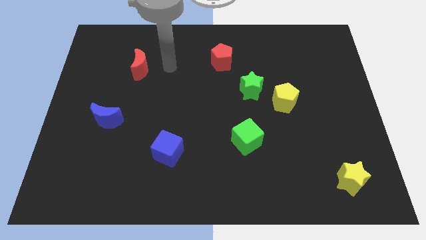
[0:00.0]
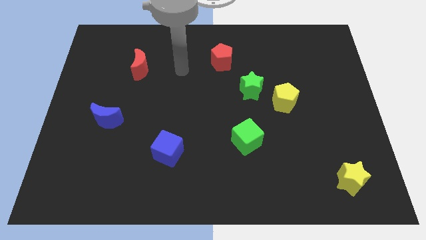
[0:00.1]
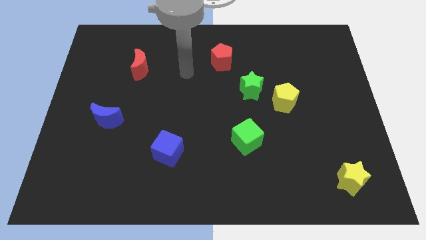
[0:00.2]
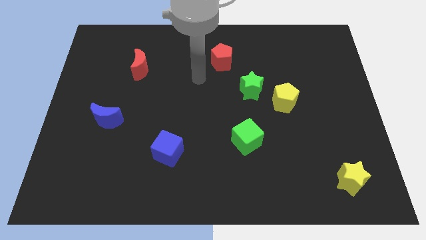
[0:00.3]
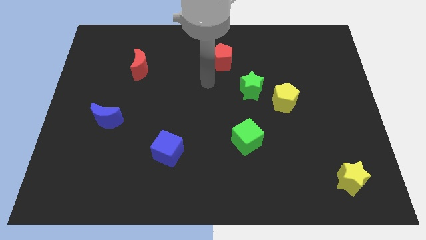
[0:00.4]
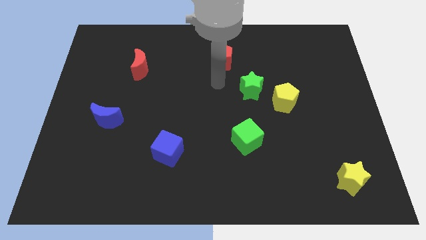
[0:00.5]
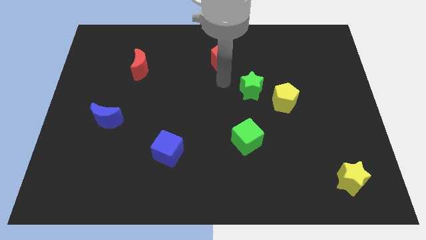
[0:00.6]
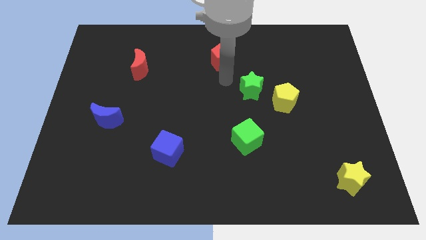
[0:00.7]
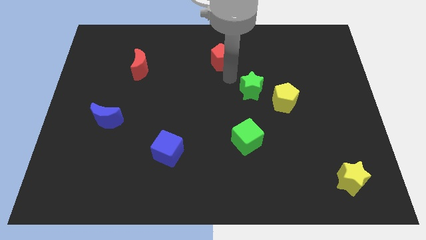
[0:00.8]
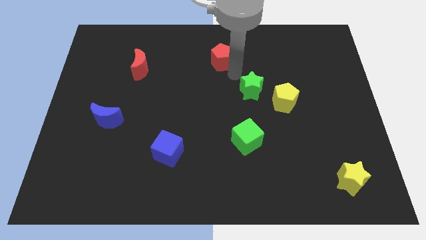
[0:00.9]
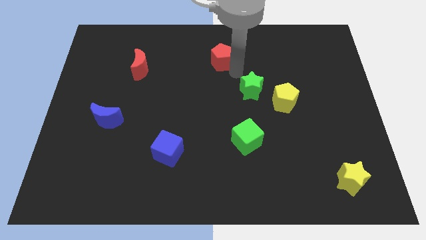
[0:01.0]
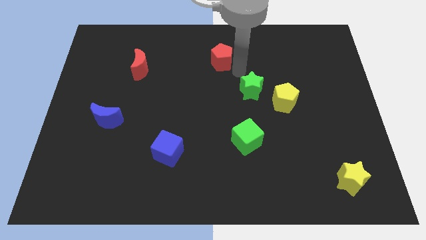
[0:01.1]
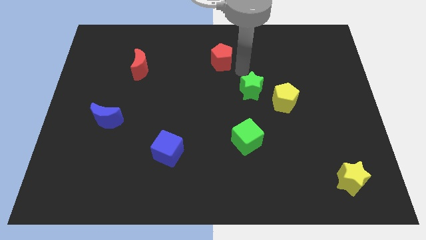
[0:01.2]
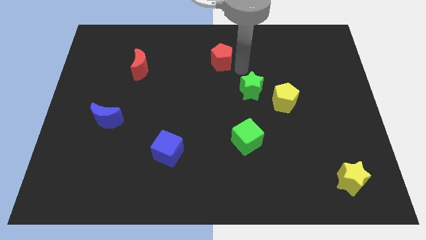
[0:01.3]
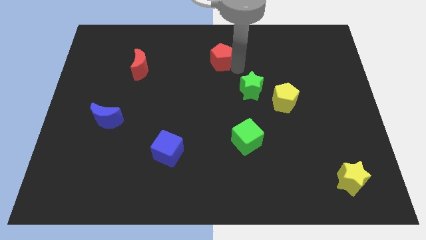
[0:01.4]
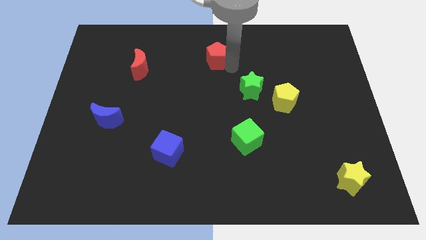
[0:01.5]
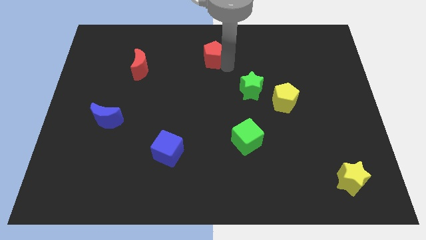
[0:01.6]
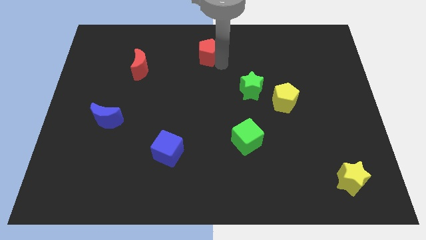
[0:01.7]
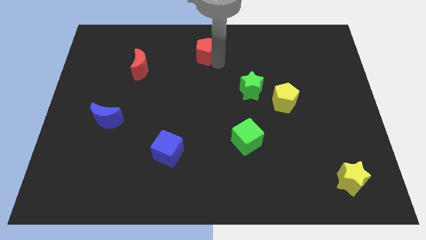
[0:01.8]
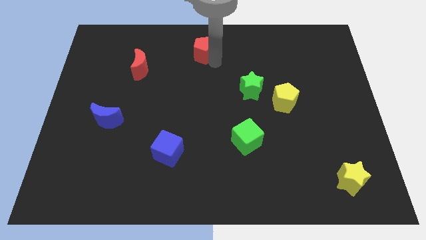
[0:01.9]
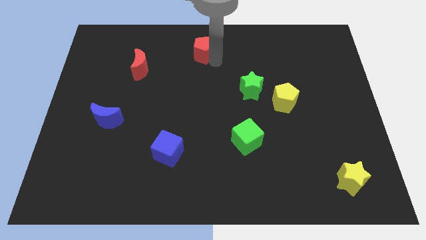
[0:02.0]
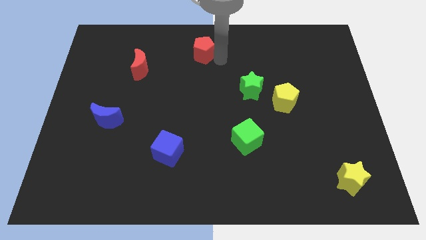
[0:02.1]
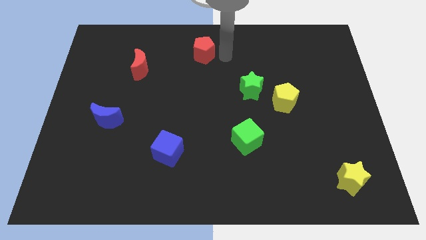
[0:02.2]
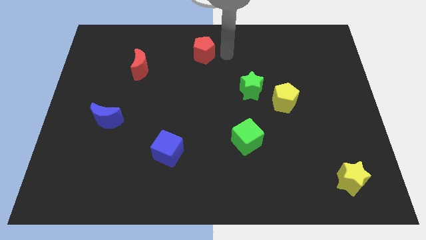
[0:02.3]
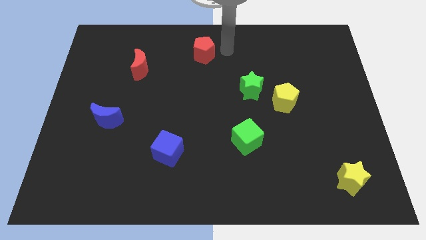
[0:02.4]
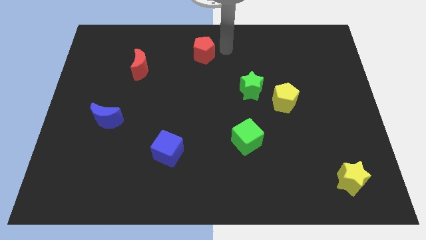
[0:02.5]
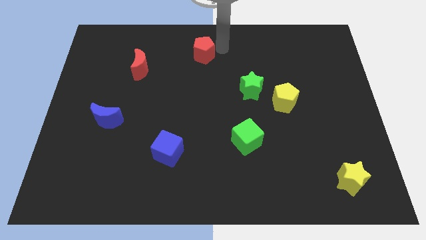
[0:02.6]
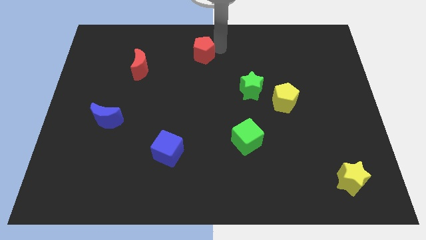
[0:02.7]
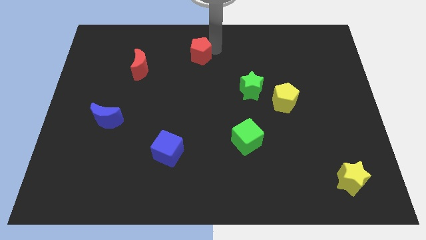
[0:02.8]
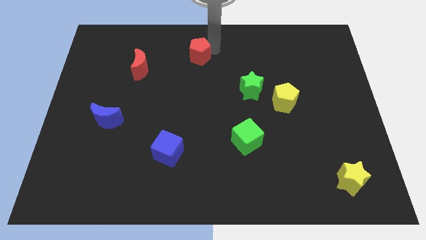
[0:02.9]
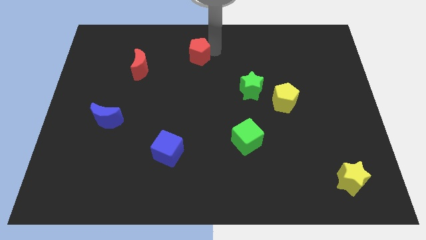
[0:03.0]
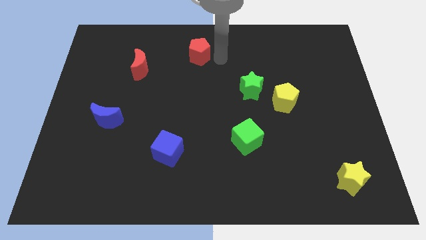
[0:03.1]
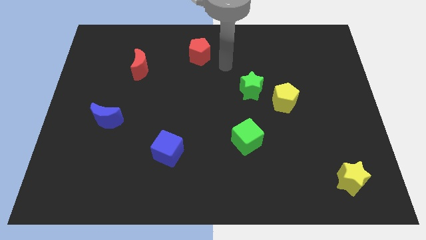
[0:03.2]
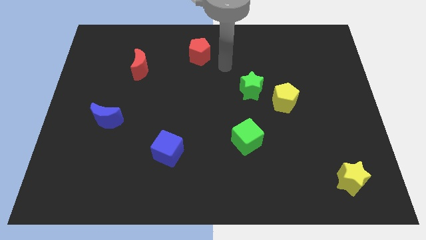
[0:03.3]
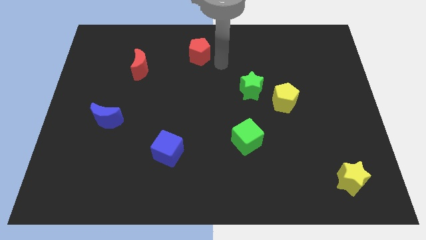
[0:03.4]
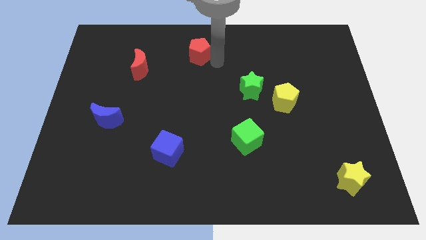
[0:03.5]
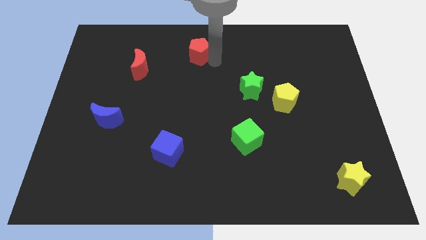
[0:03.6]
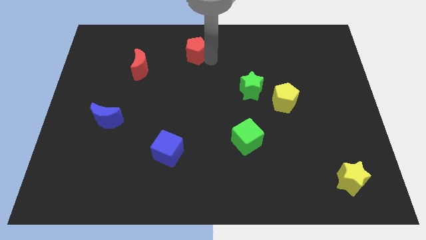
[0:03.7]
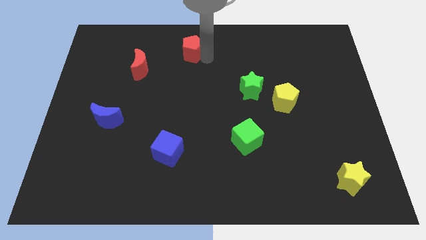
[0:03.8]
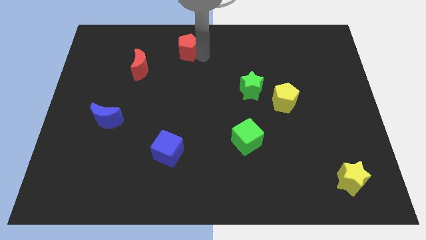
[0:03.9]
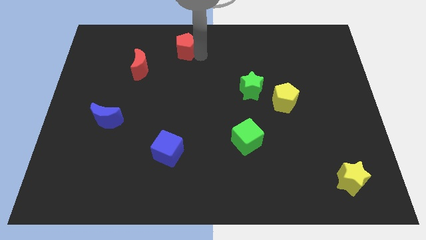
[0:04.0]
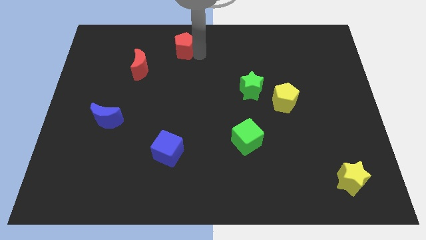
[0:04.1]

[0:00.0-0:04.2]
move the red pentagon towards the top left

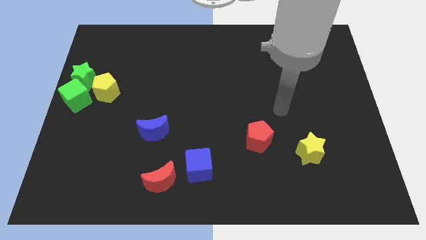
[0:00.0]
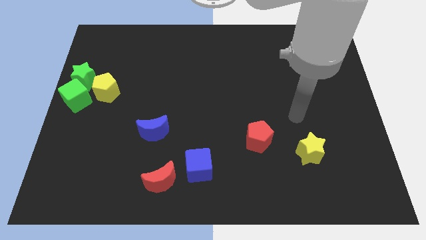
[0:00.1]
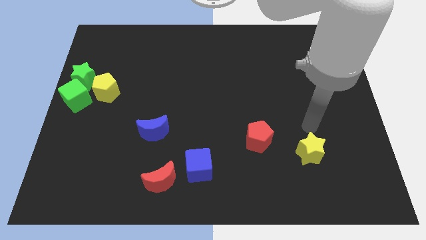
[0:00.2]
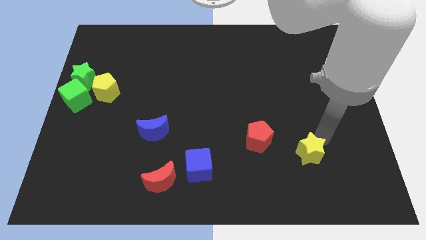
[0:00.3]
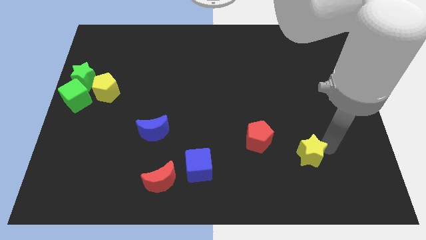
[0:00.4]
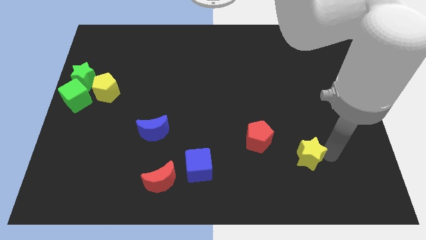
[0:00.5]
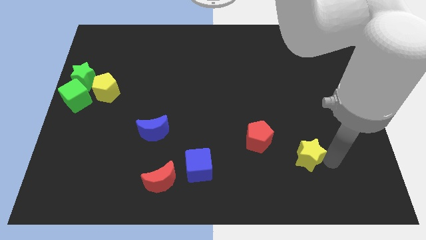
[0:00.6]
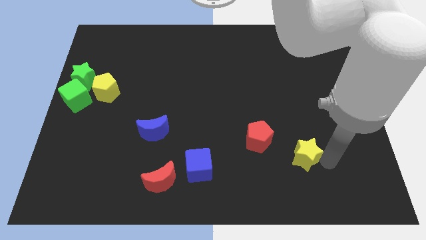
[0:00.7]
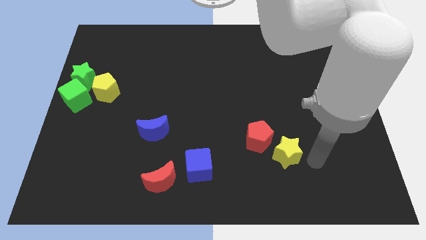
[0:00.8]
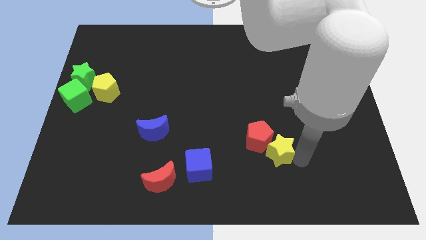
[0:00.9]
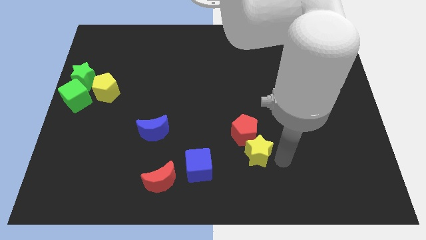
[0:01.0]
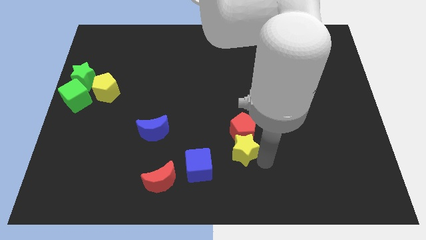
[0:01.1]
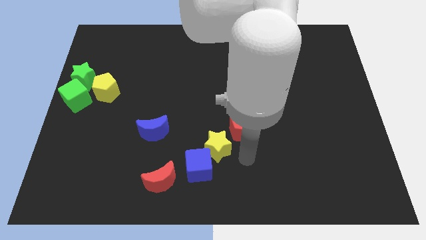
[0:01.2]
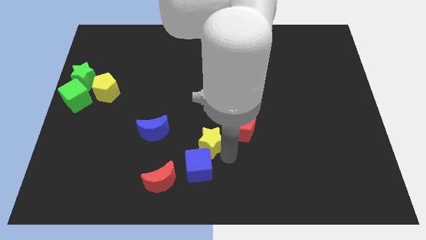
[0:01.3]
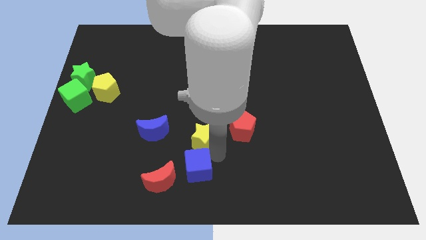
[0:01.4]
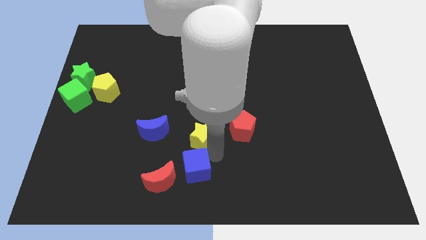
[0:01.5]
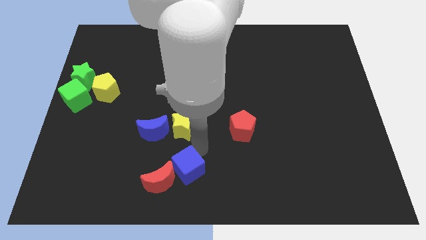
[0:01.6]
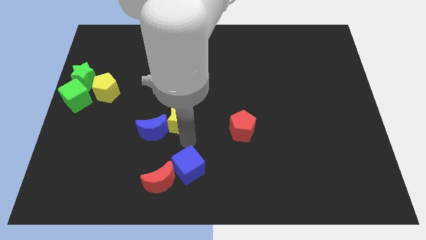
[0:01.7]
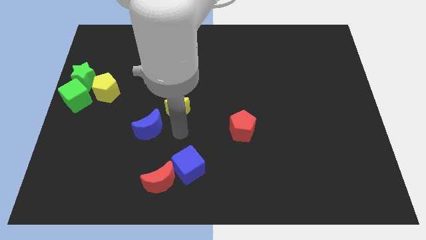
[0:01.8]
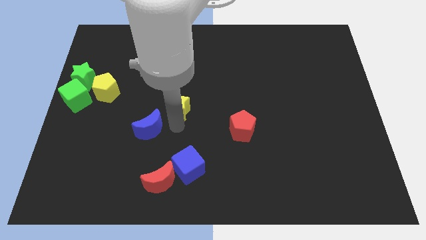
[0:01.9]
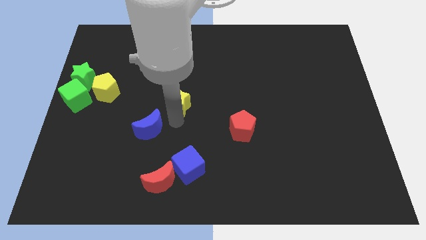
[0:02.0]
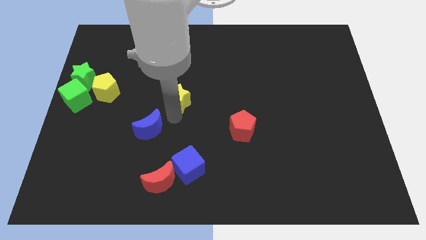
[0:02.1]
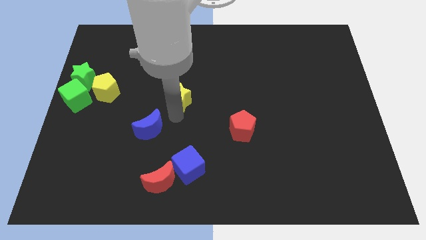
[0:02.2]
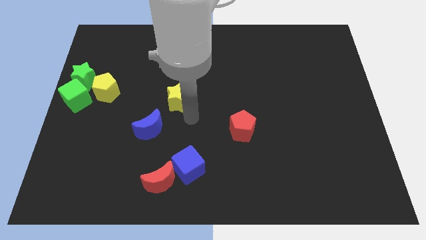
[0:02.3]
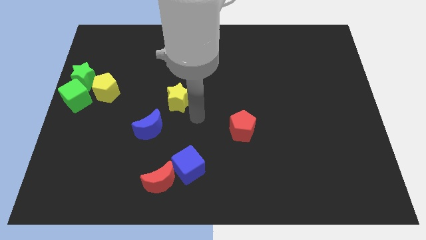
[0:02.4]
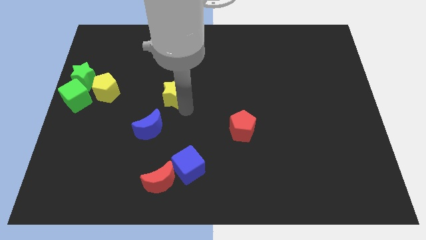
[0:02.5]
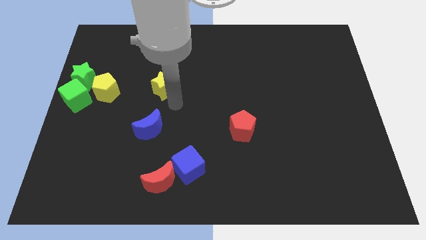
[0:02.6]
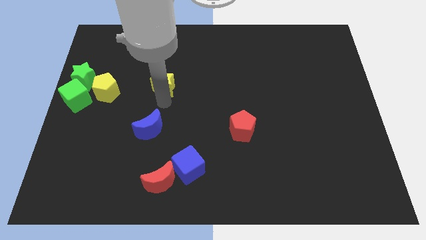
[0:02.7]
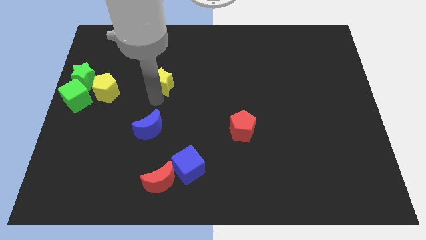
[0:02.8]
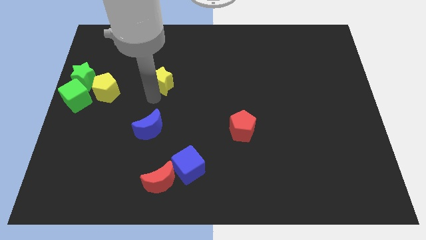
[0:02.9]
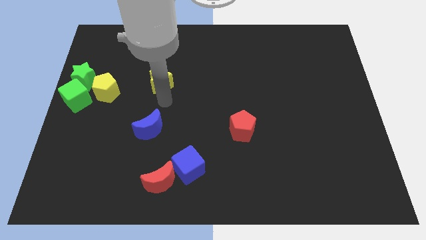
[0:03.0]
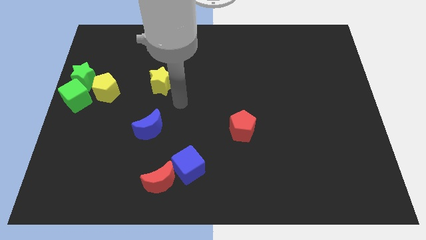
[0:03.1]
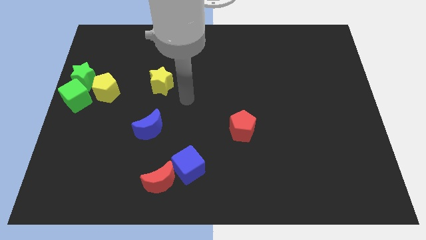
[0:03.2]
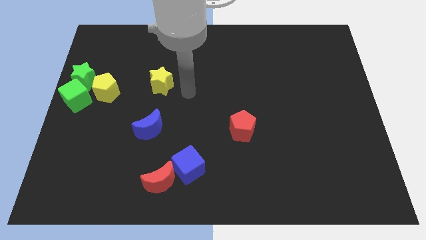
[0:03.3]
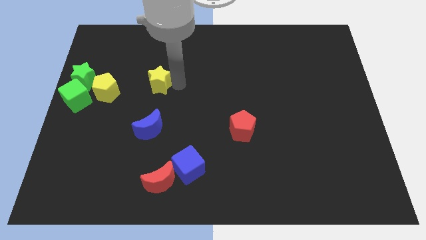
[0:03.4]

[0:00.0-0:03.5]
place yellow star to the top of blue moon

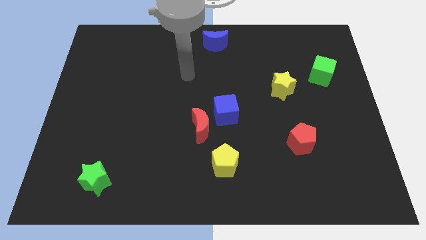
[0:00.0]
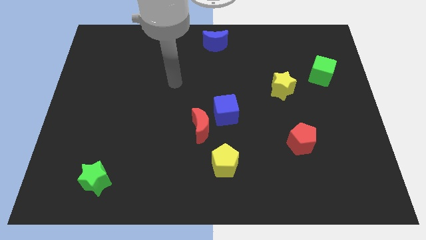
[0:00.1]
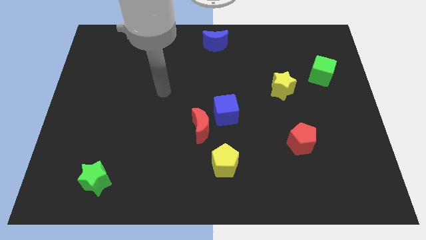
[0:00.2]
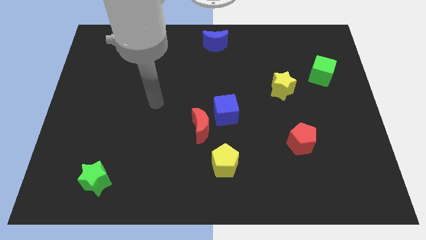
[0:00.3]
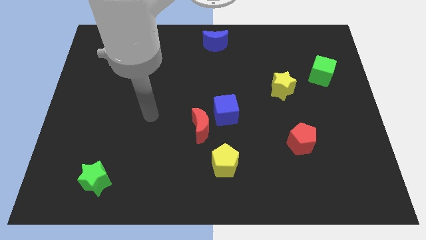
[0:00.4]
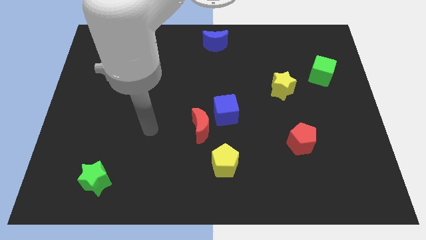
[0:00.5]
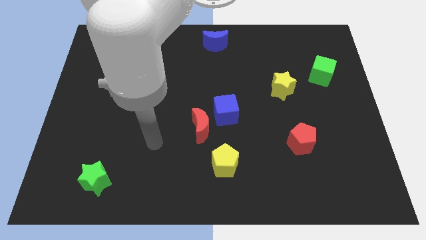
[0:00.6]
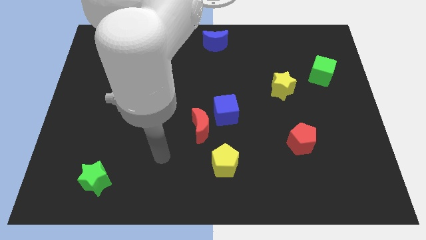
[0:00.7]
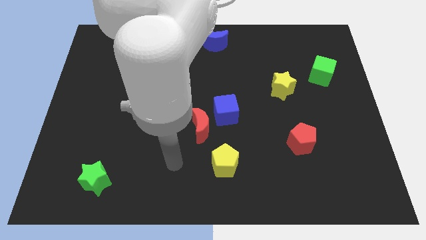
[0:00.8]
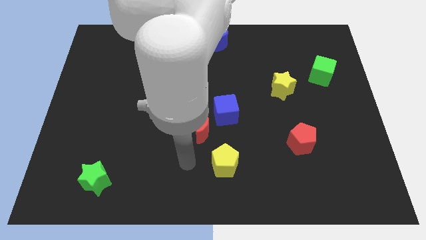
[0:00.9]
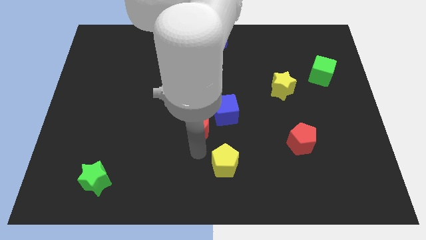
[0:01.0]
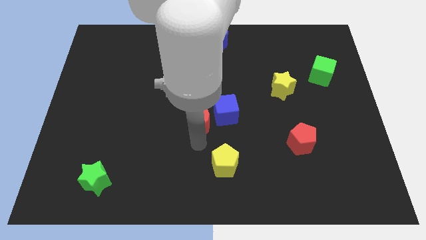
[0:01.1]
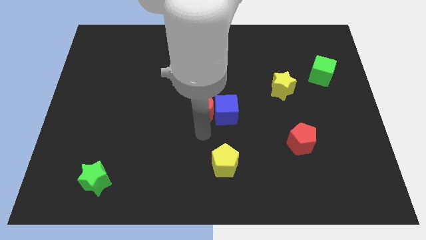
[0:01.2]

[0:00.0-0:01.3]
put the red moon parallel left to the blue cube
